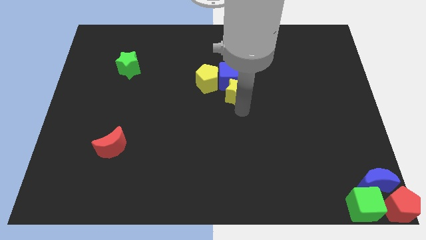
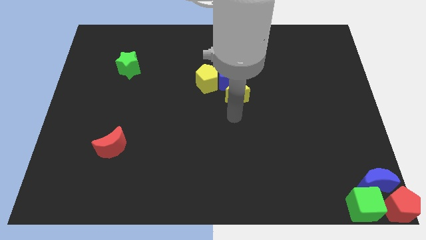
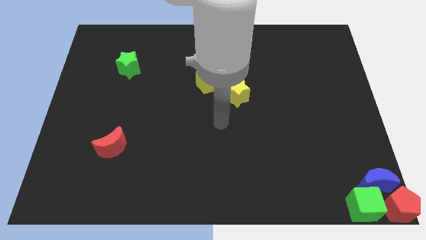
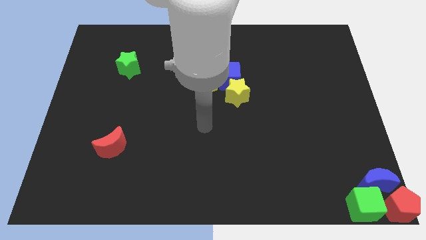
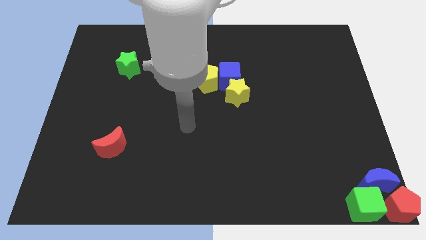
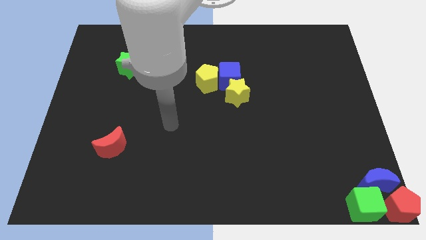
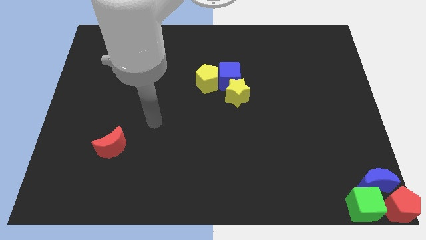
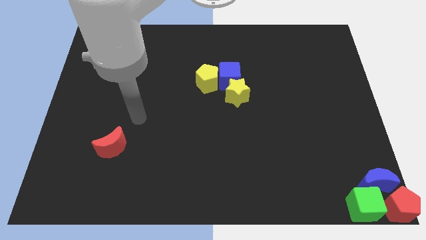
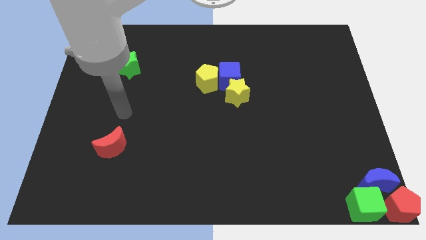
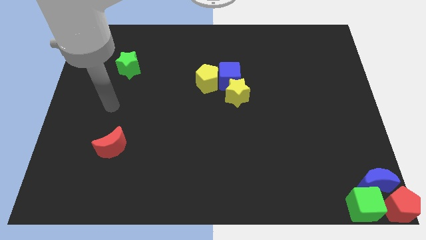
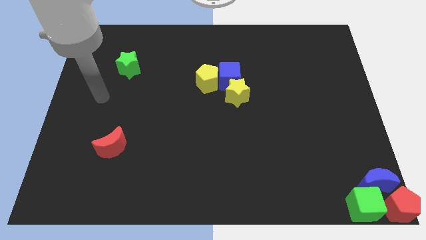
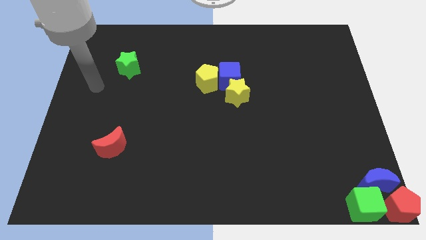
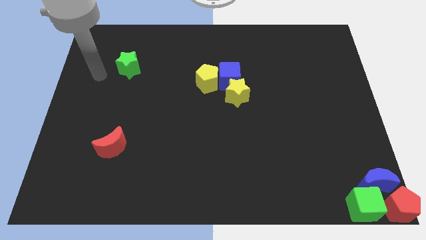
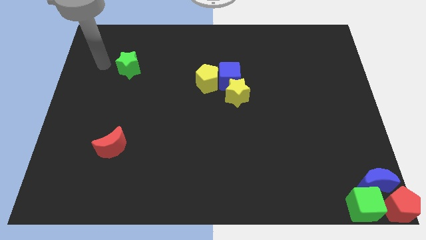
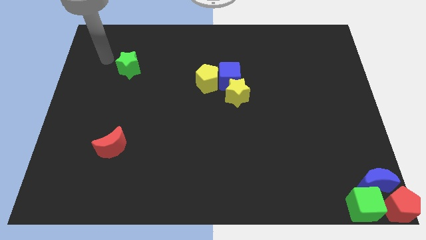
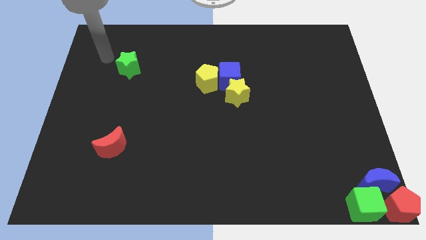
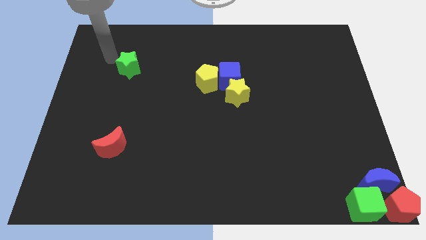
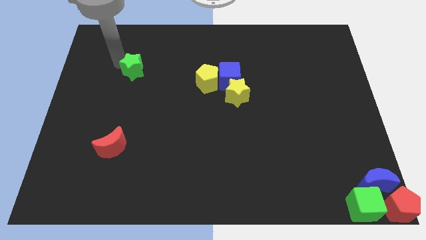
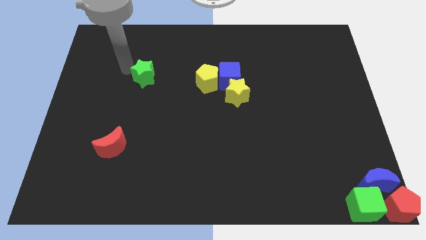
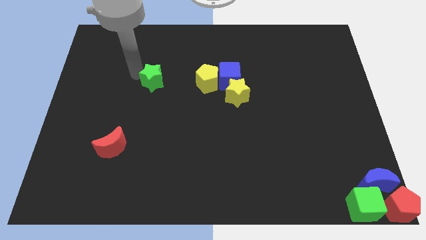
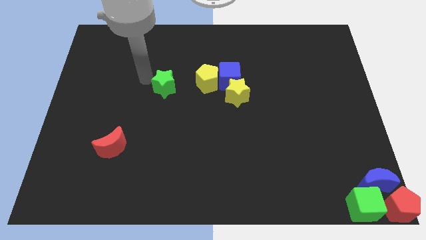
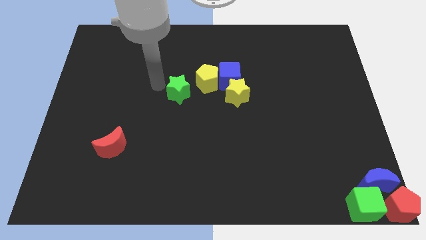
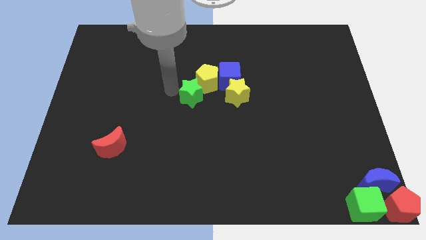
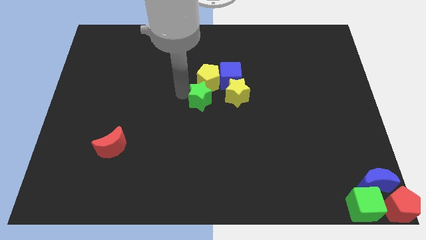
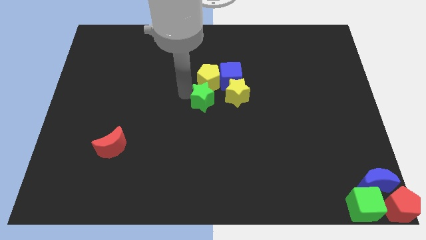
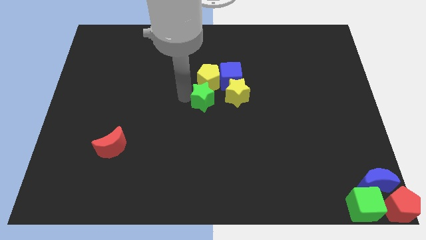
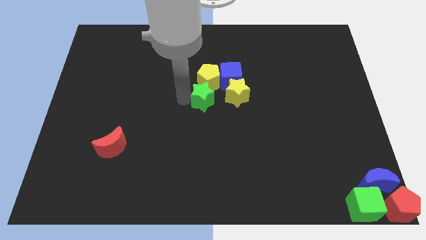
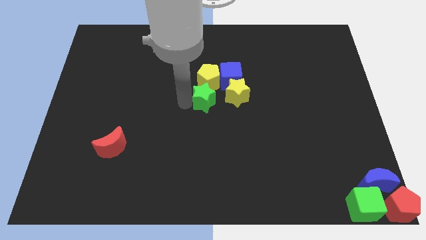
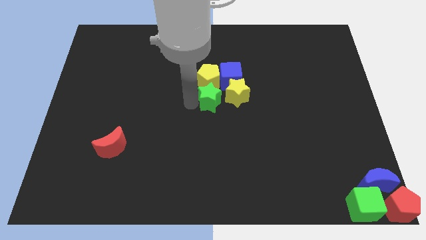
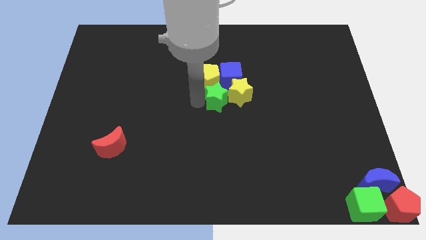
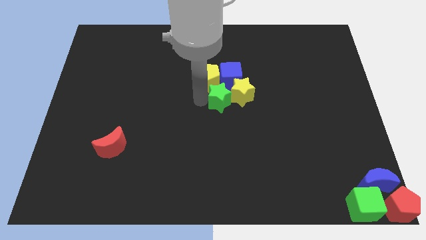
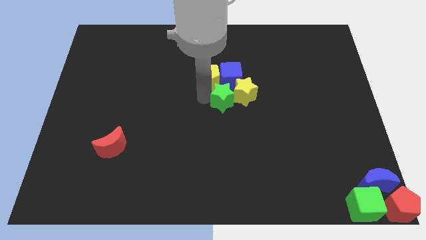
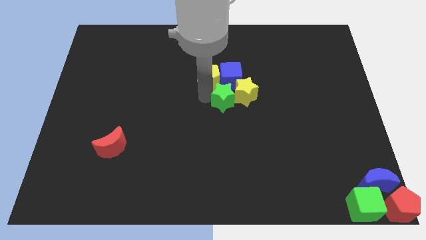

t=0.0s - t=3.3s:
put the green star into the yellow star

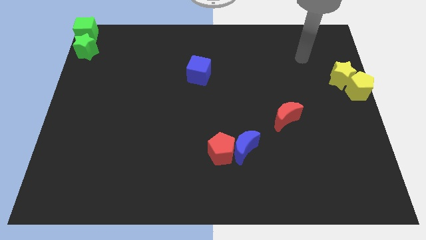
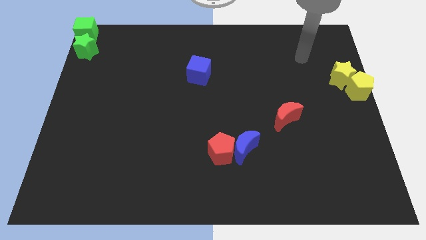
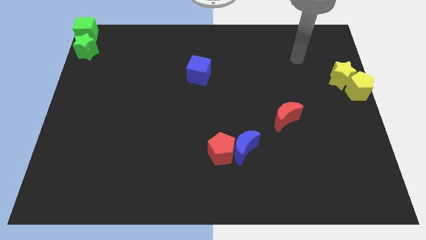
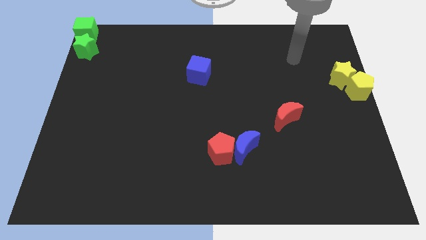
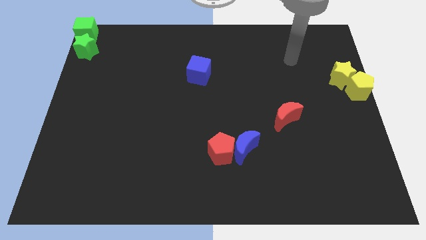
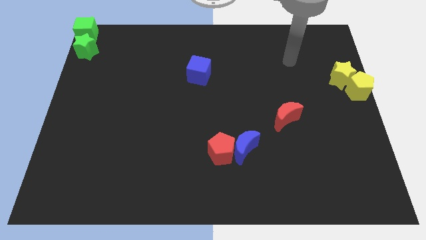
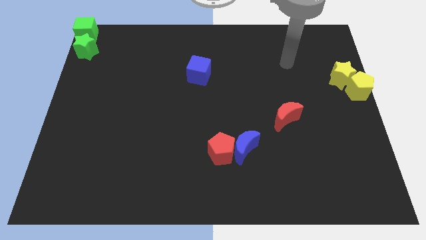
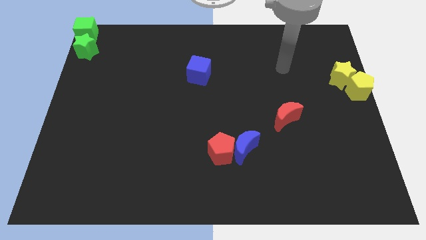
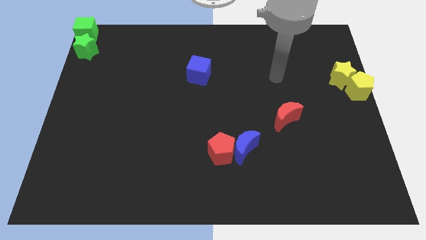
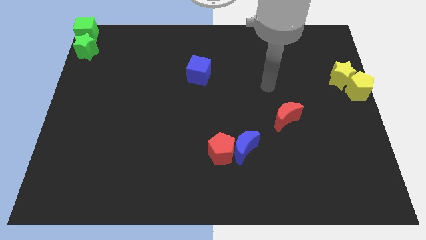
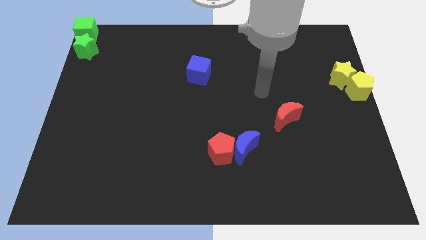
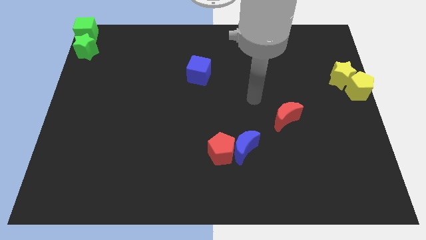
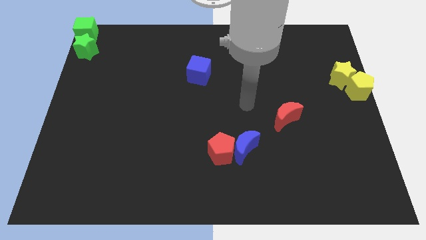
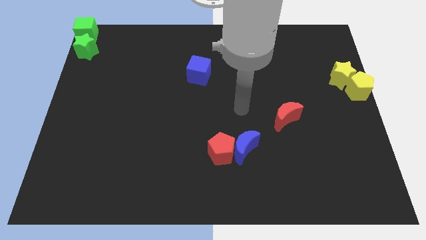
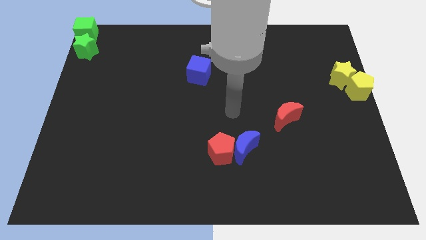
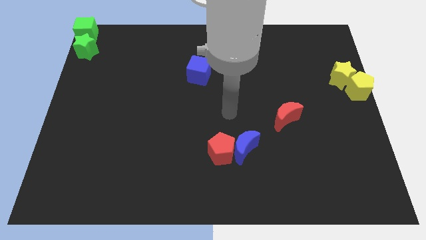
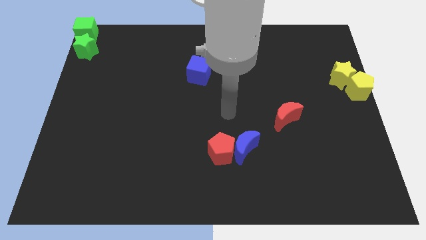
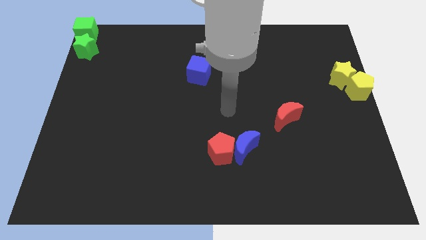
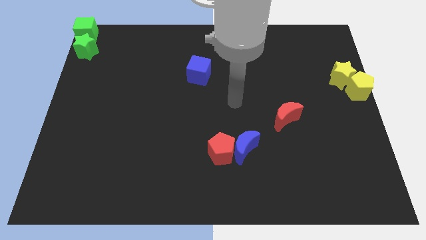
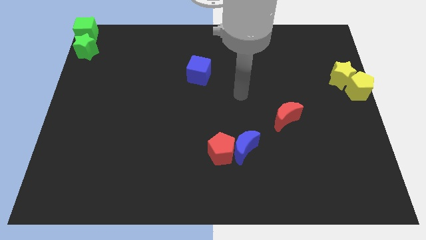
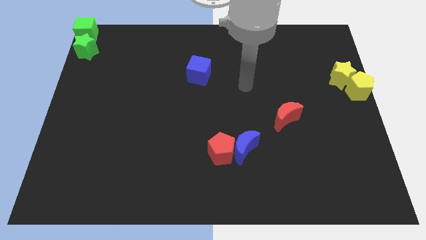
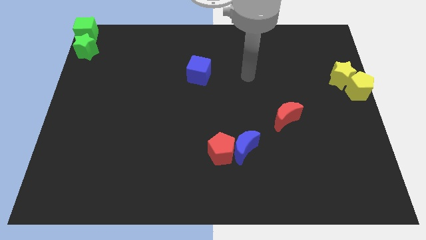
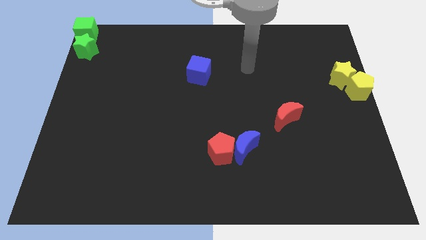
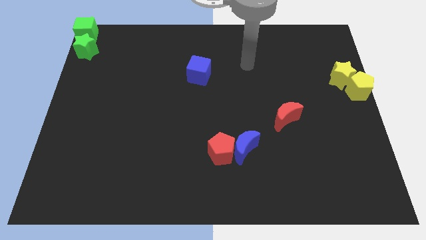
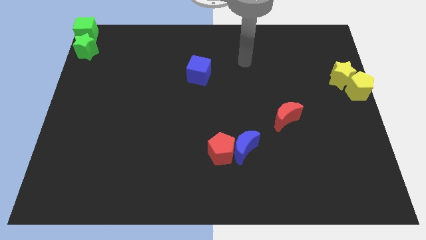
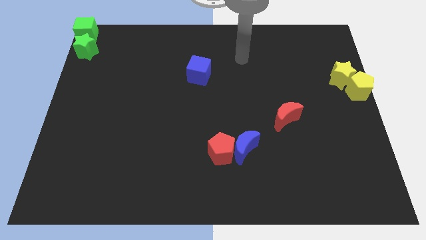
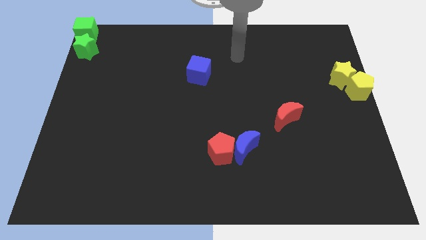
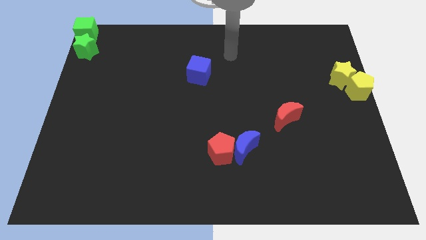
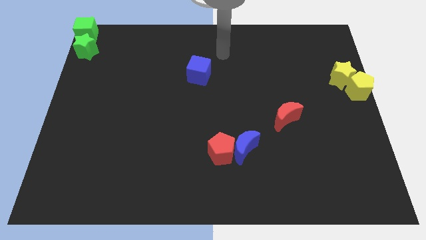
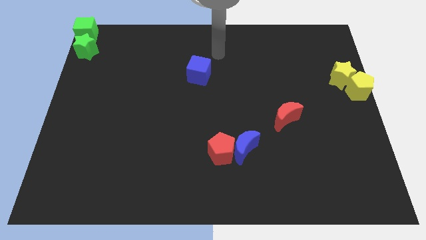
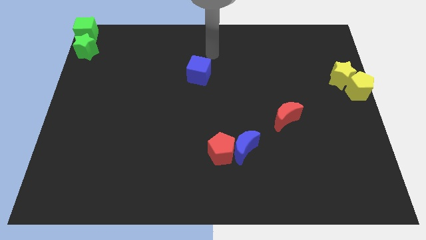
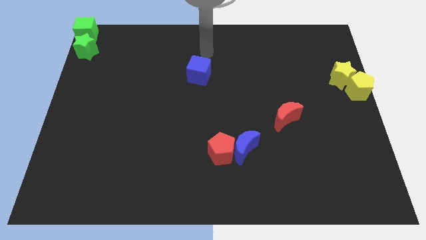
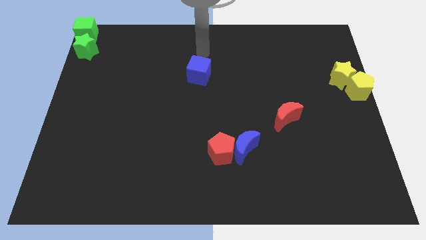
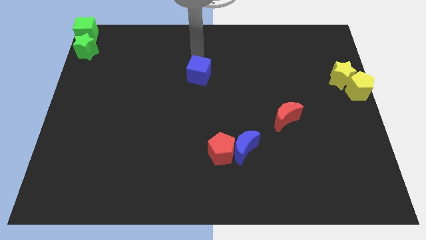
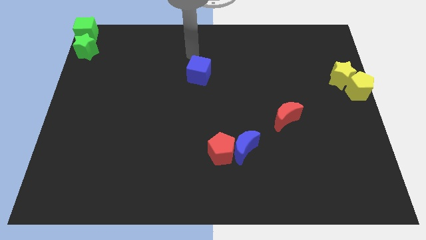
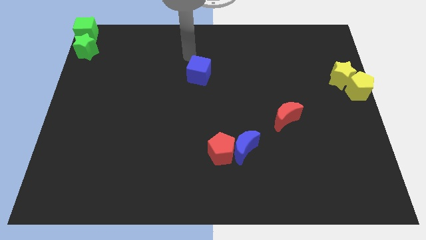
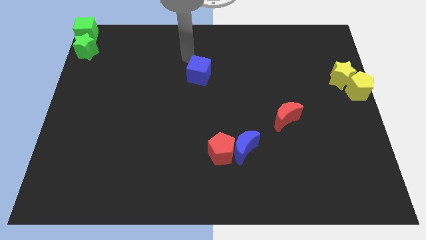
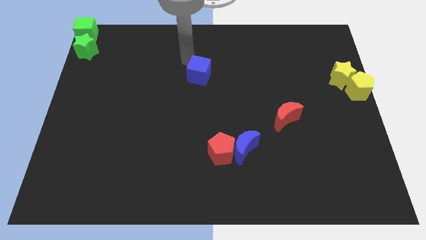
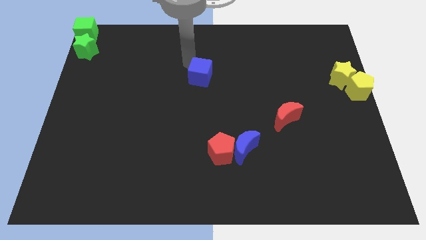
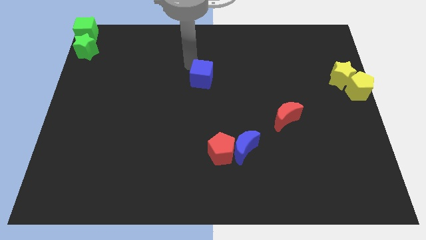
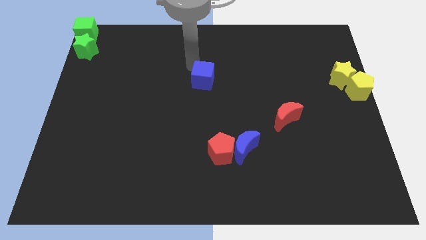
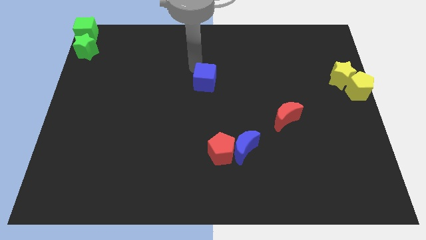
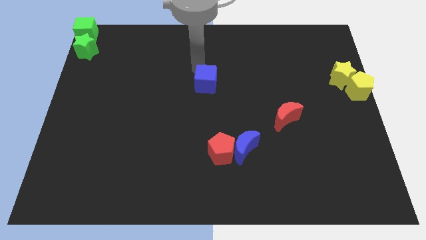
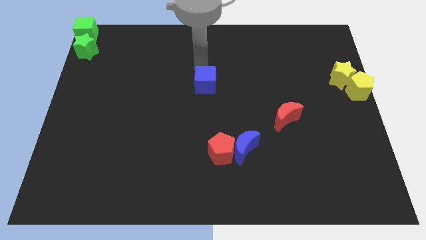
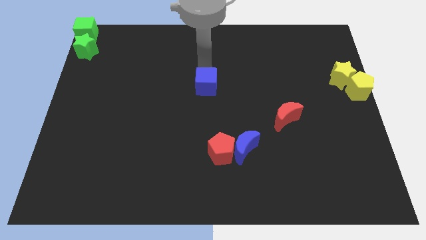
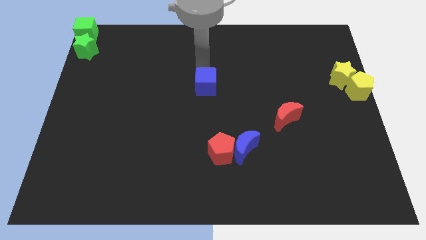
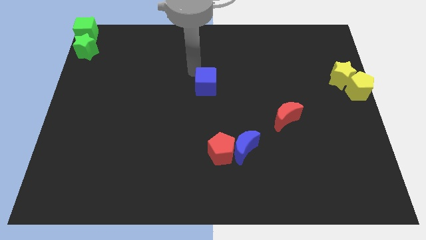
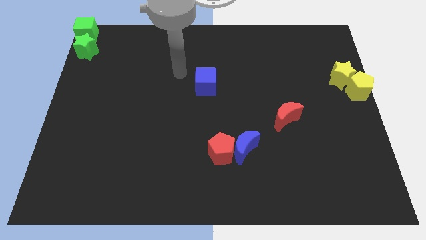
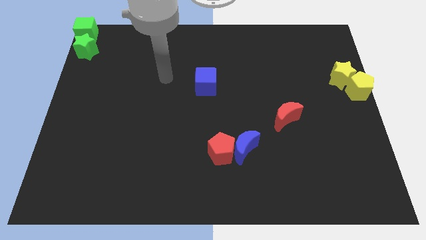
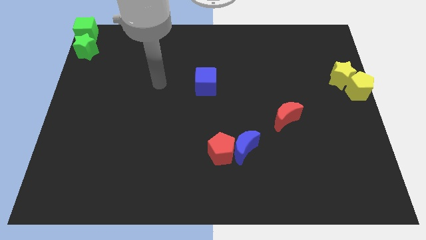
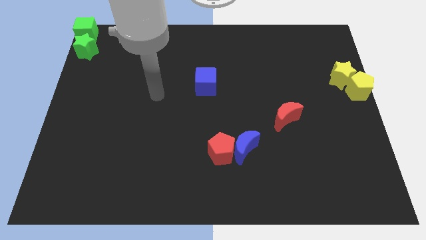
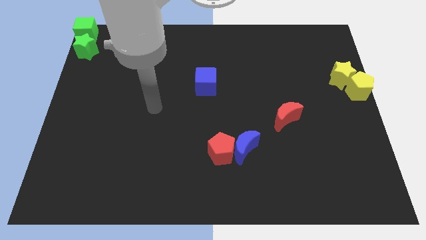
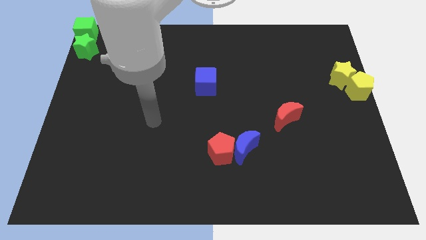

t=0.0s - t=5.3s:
push the blue cube slightly to the down

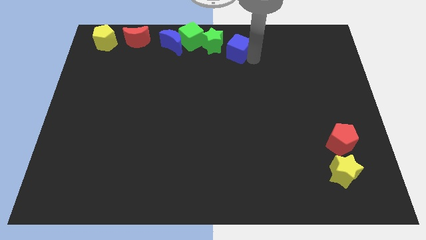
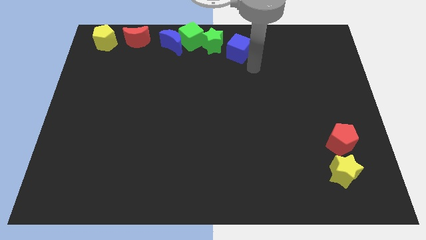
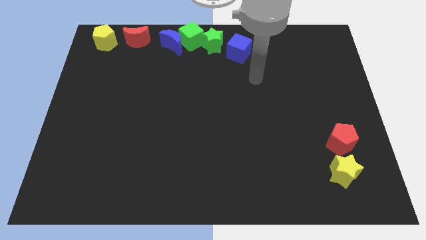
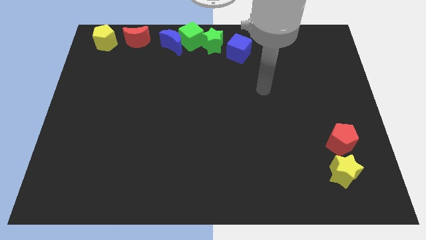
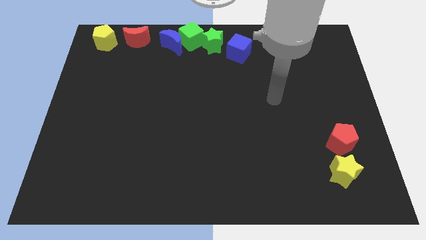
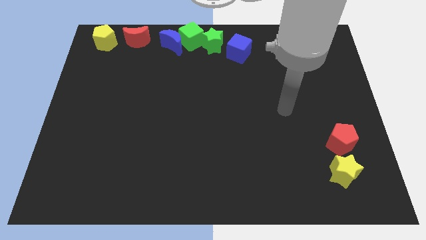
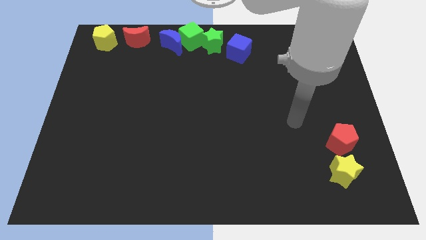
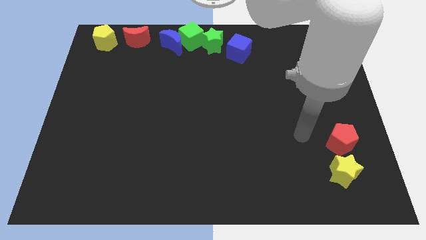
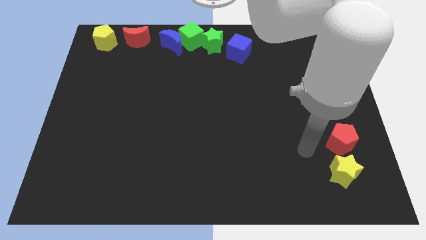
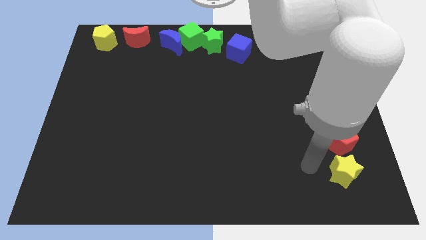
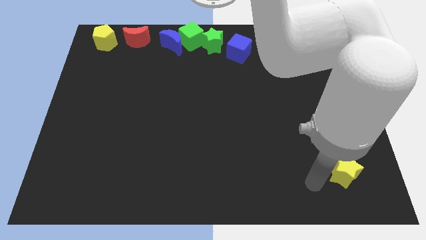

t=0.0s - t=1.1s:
point your hand at the left side of the yellow star
